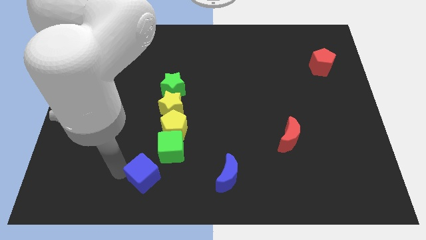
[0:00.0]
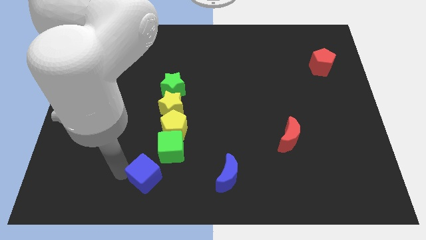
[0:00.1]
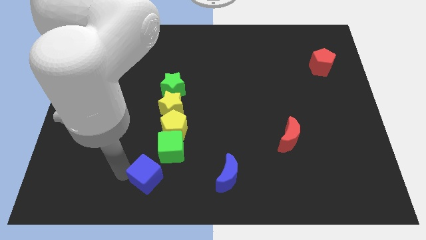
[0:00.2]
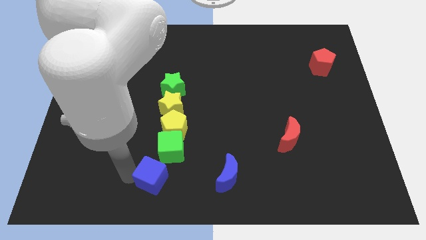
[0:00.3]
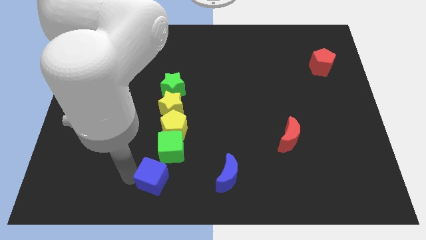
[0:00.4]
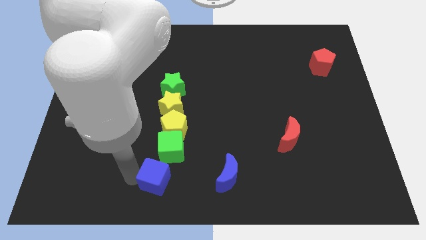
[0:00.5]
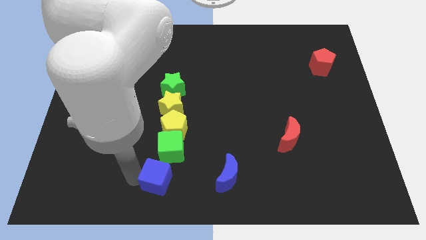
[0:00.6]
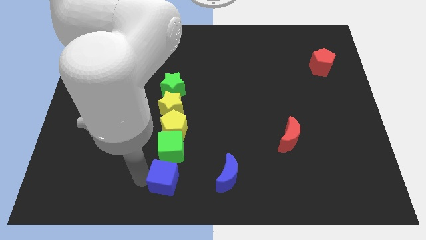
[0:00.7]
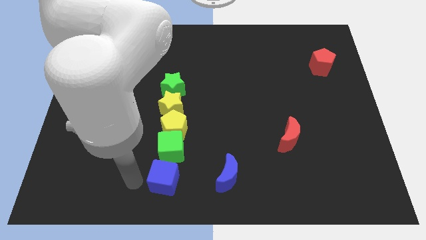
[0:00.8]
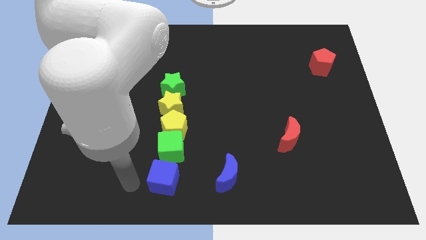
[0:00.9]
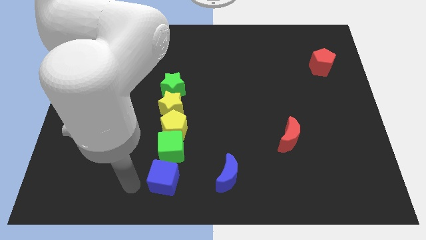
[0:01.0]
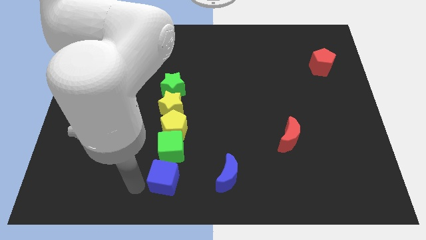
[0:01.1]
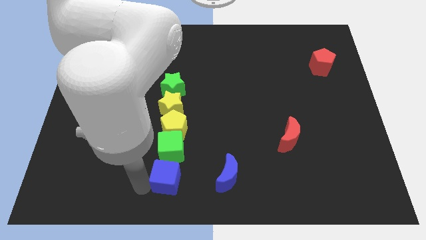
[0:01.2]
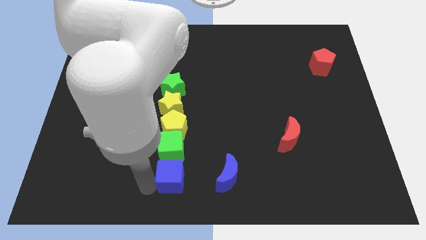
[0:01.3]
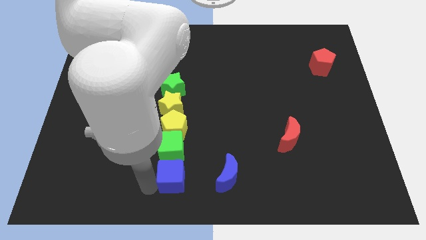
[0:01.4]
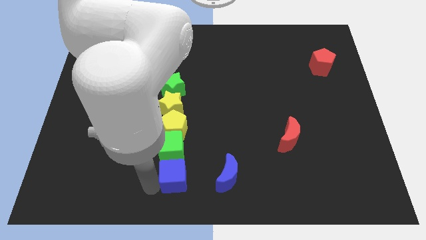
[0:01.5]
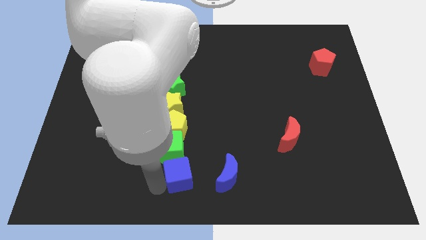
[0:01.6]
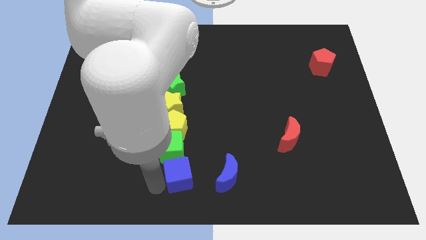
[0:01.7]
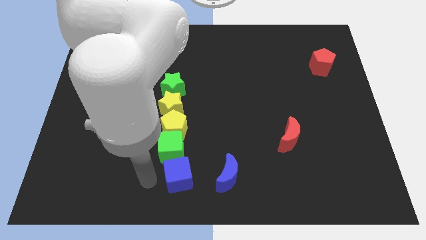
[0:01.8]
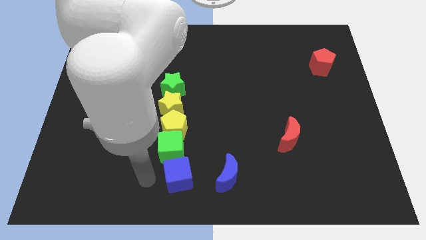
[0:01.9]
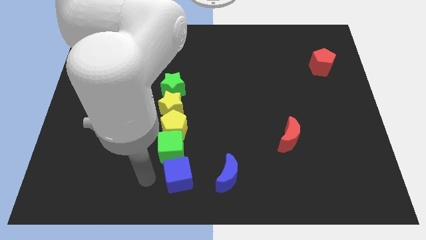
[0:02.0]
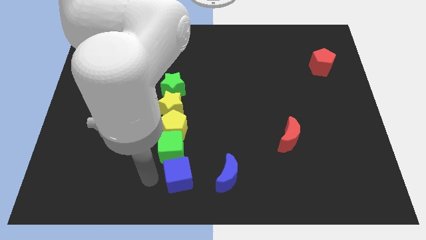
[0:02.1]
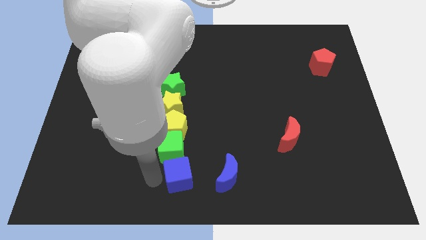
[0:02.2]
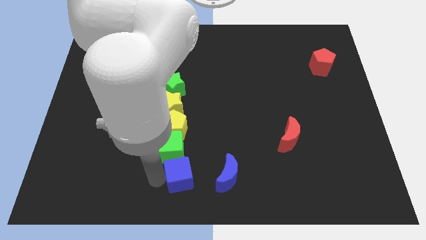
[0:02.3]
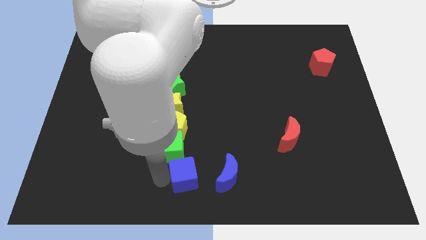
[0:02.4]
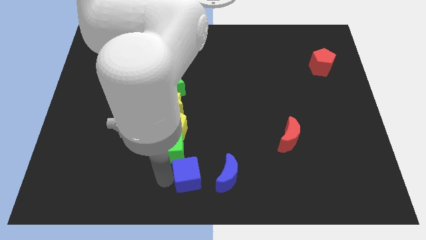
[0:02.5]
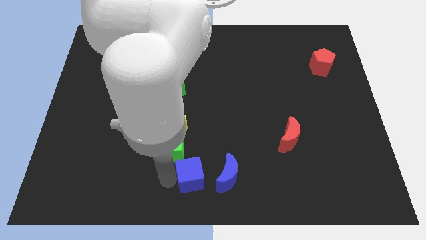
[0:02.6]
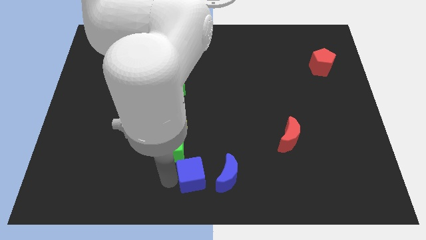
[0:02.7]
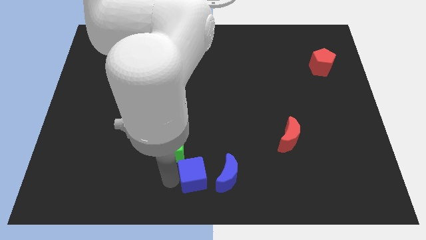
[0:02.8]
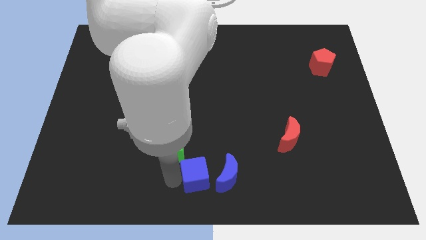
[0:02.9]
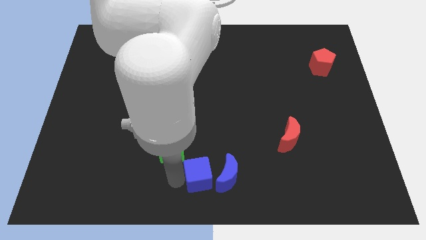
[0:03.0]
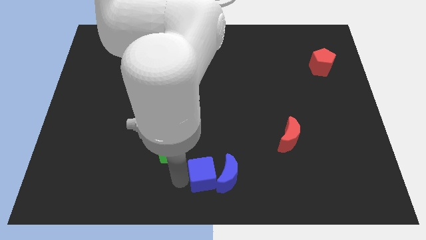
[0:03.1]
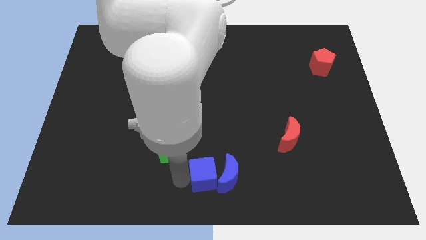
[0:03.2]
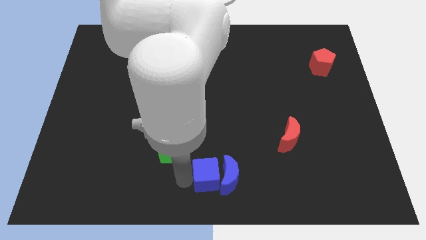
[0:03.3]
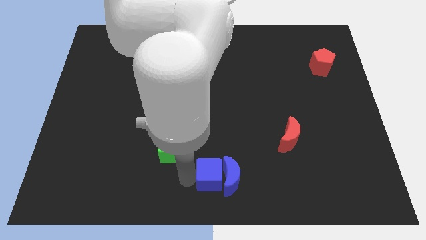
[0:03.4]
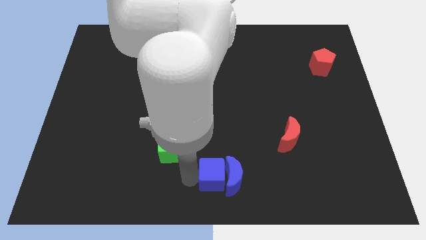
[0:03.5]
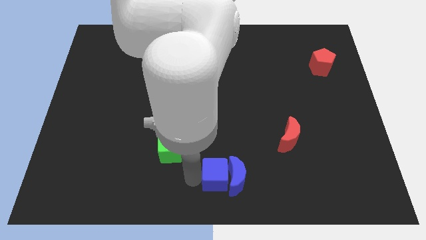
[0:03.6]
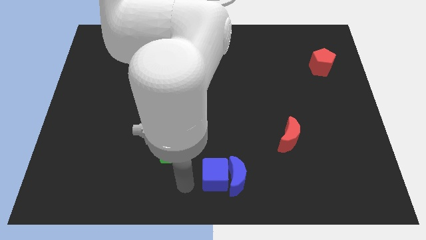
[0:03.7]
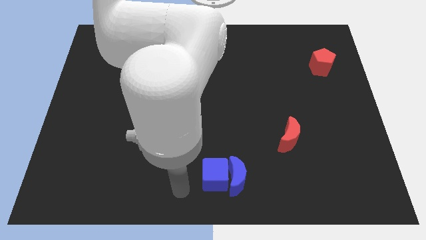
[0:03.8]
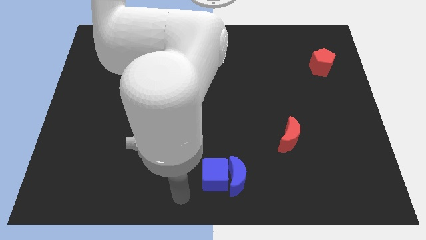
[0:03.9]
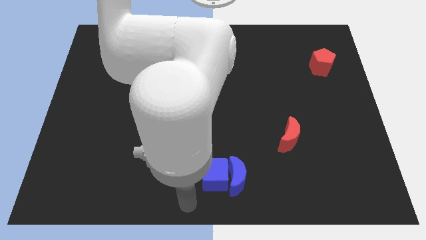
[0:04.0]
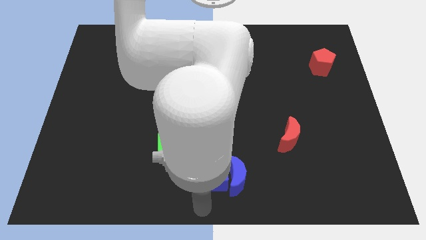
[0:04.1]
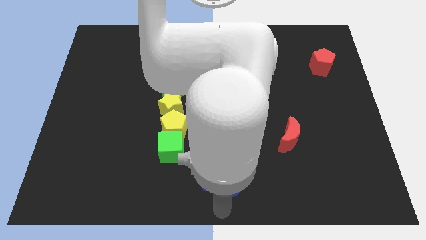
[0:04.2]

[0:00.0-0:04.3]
slide the blue cube into the left side of the blue crescent

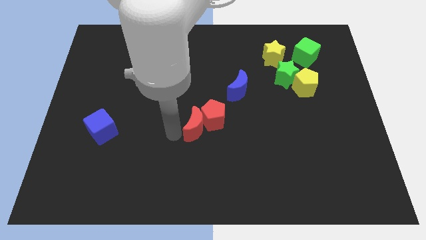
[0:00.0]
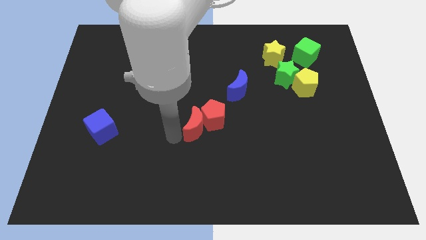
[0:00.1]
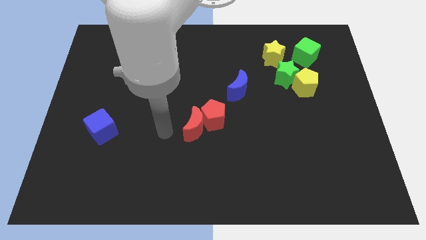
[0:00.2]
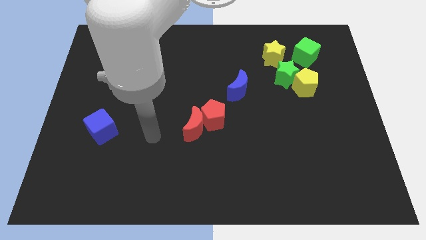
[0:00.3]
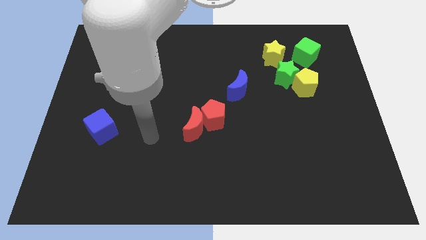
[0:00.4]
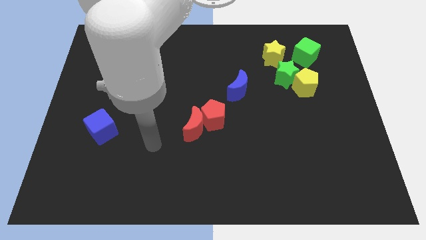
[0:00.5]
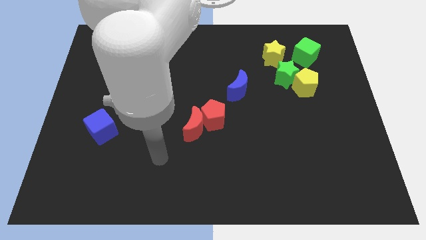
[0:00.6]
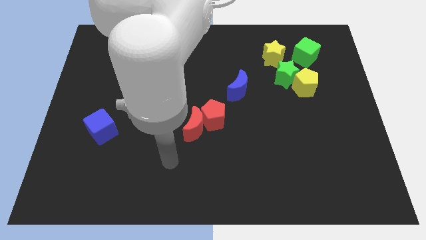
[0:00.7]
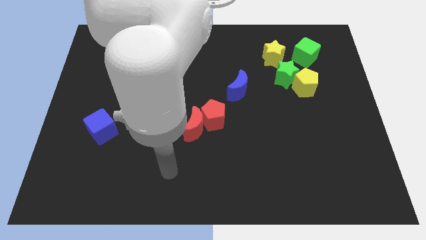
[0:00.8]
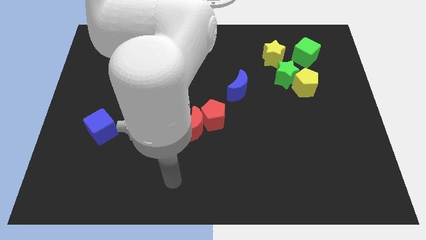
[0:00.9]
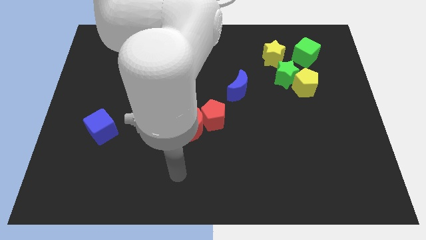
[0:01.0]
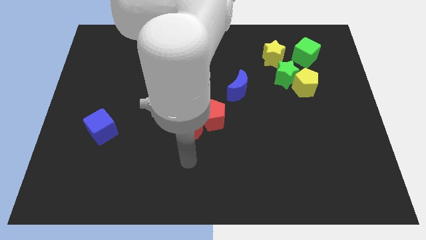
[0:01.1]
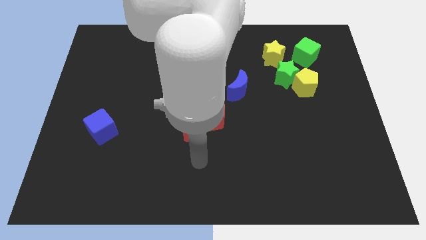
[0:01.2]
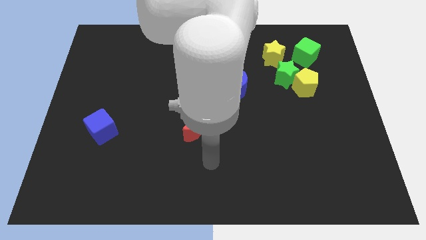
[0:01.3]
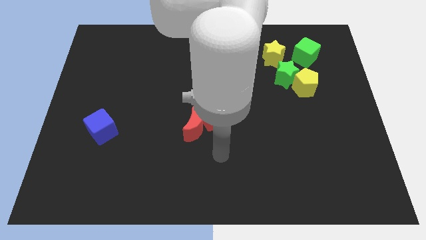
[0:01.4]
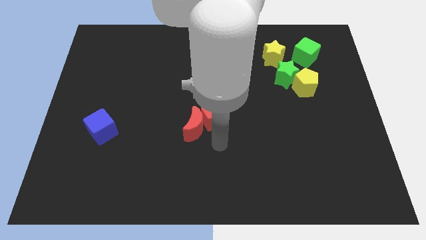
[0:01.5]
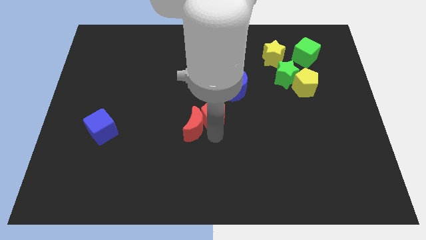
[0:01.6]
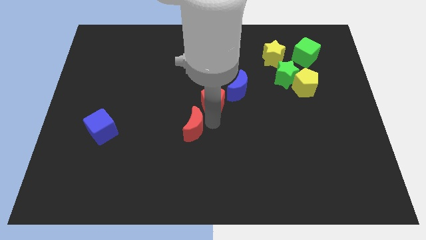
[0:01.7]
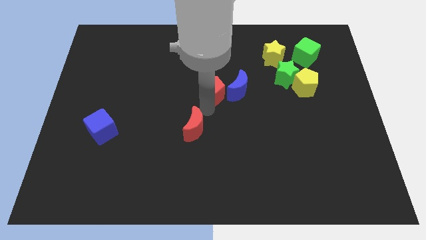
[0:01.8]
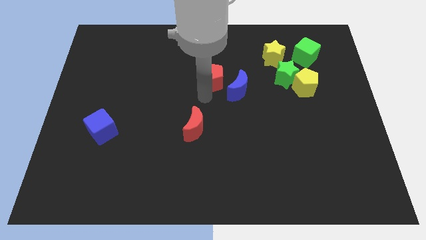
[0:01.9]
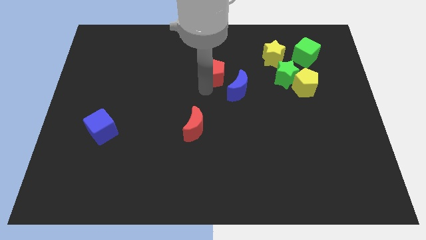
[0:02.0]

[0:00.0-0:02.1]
push red pentagon towards top

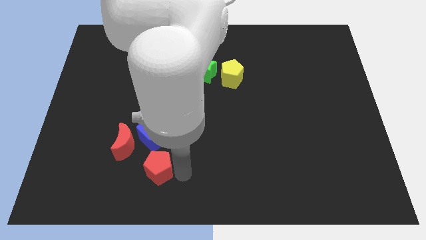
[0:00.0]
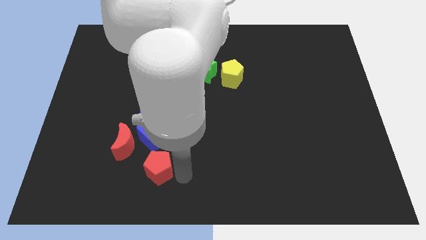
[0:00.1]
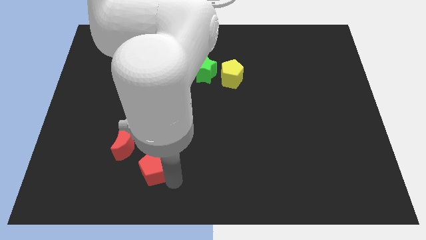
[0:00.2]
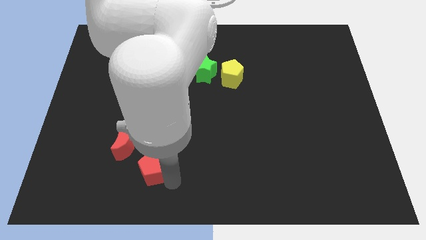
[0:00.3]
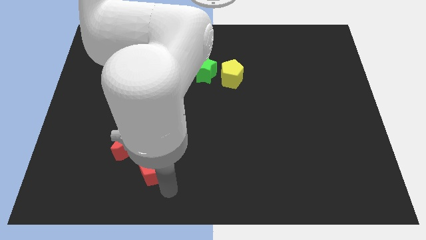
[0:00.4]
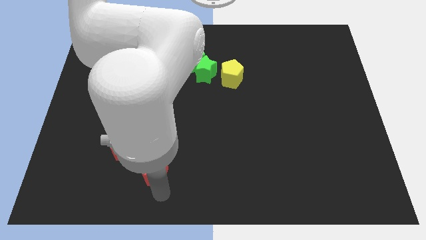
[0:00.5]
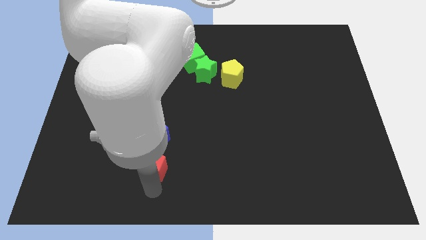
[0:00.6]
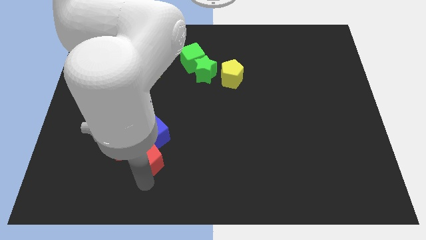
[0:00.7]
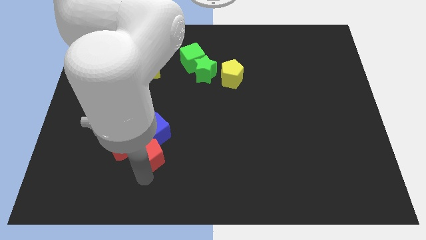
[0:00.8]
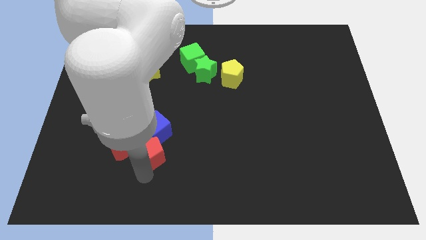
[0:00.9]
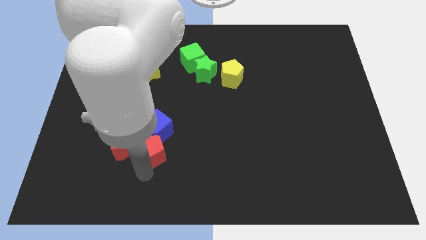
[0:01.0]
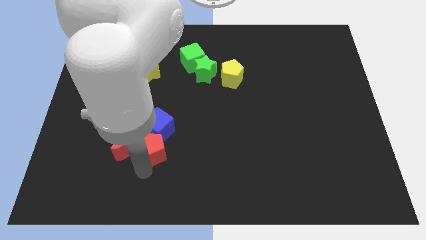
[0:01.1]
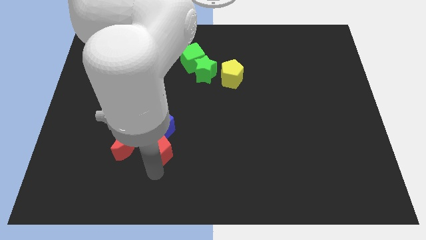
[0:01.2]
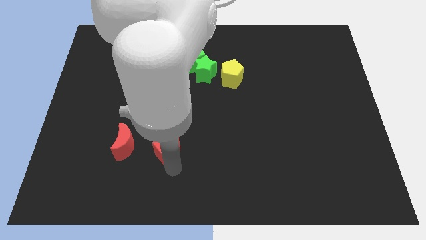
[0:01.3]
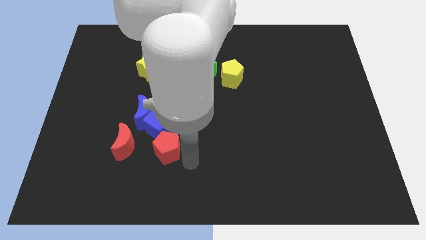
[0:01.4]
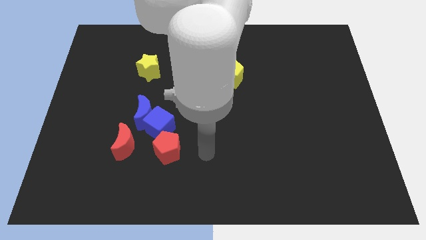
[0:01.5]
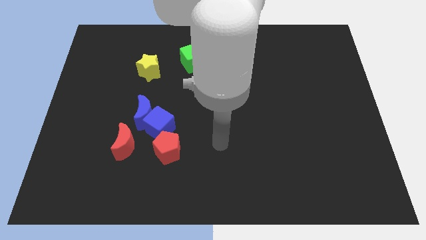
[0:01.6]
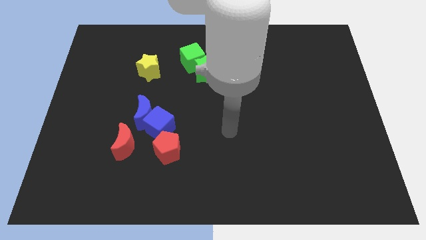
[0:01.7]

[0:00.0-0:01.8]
push the red pentagon towards the bottom of the blue cube

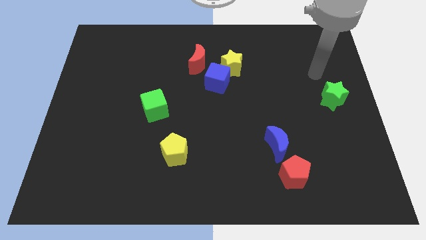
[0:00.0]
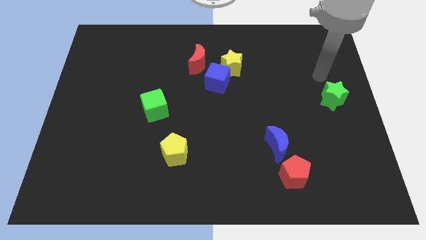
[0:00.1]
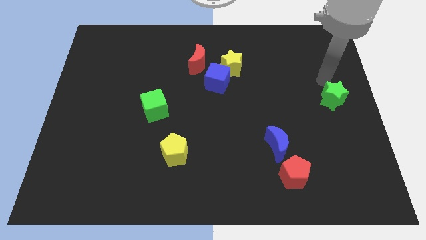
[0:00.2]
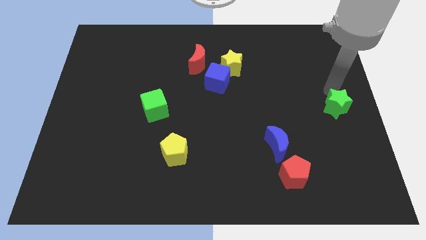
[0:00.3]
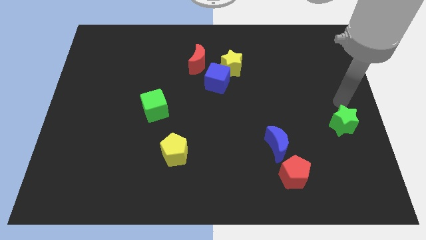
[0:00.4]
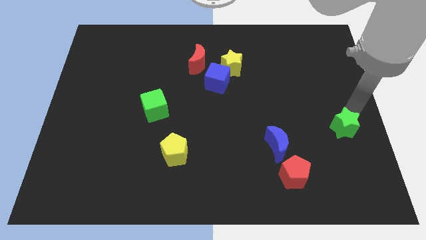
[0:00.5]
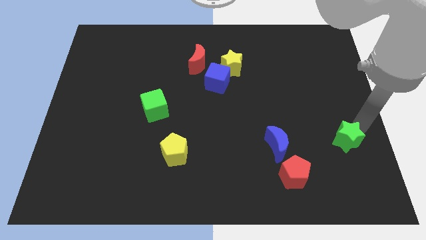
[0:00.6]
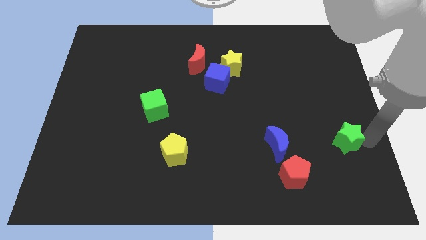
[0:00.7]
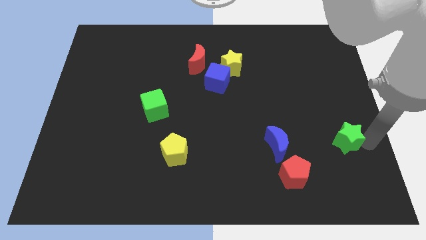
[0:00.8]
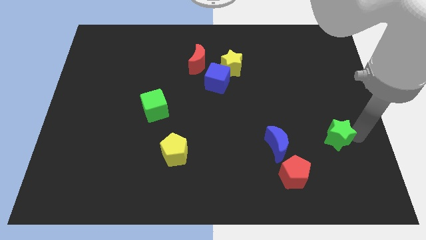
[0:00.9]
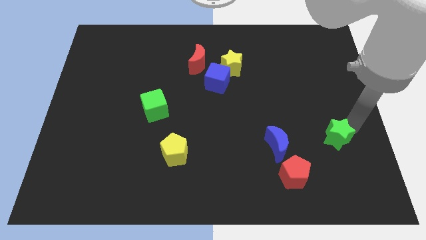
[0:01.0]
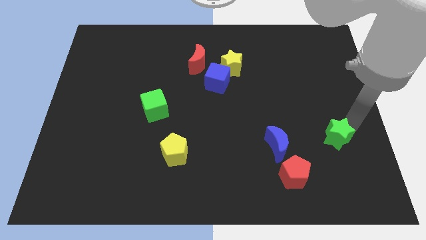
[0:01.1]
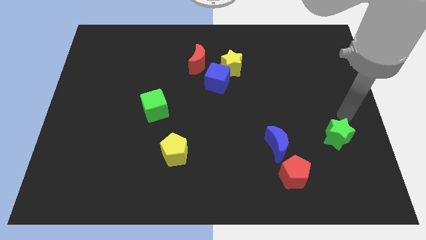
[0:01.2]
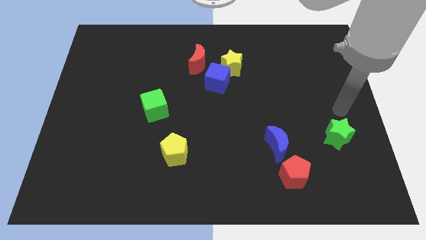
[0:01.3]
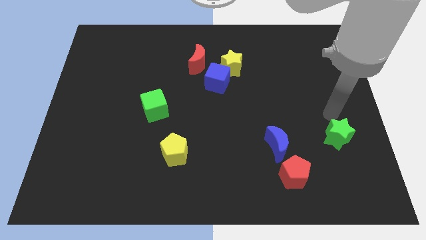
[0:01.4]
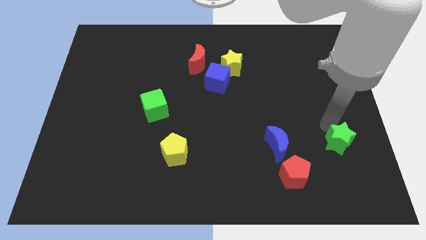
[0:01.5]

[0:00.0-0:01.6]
push the green star to the right of the blue crescent
